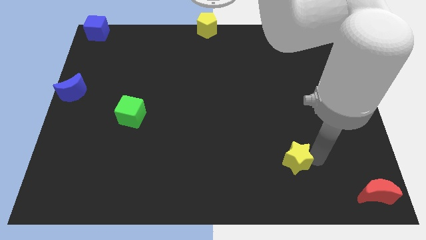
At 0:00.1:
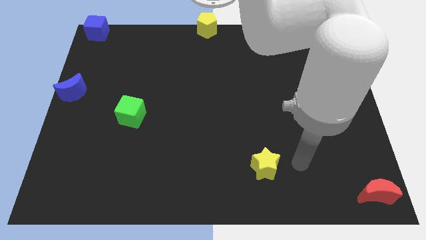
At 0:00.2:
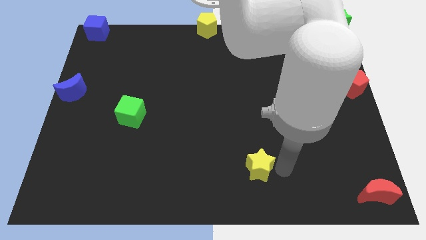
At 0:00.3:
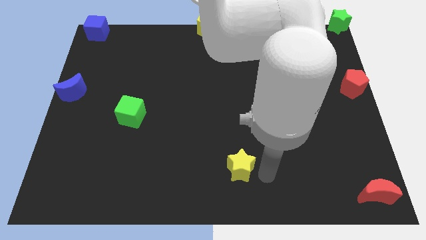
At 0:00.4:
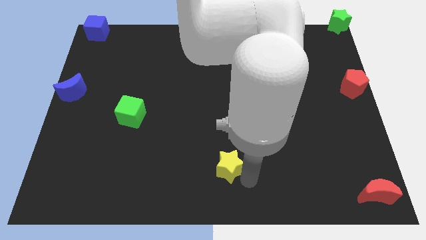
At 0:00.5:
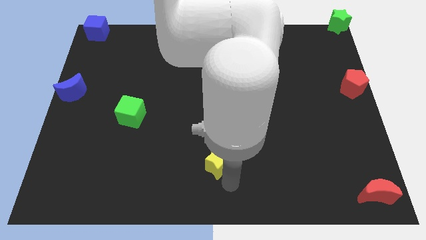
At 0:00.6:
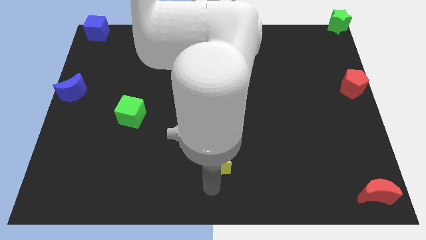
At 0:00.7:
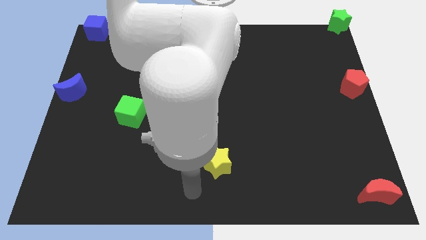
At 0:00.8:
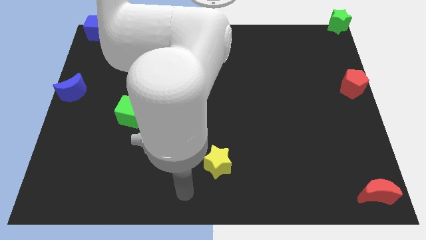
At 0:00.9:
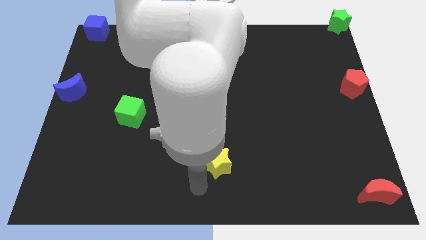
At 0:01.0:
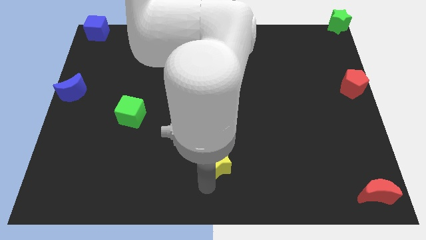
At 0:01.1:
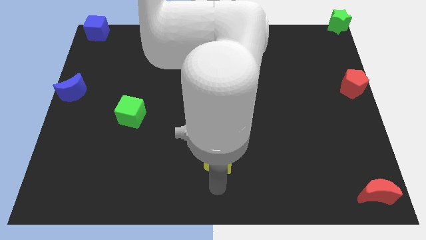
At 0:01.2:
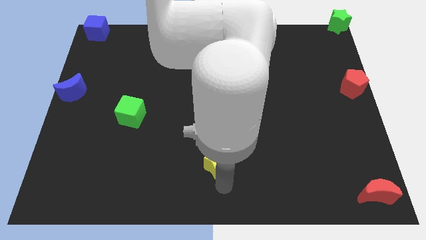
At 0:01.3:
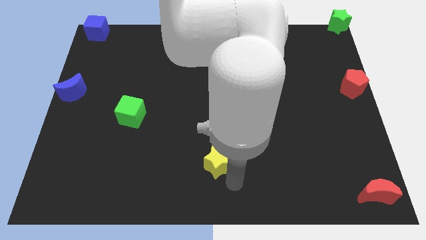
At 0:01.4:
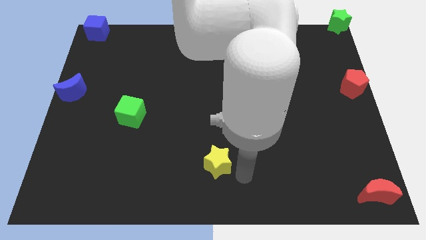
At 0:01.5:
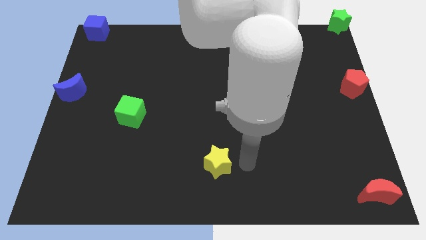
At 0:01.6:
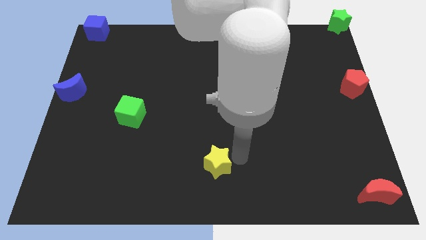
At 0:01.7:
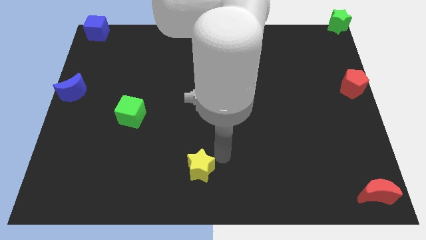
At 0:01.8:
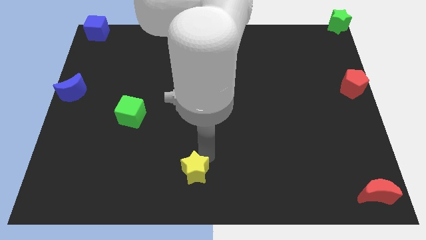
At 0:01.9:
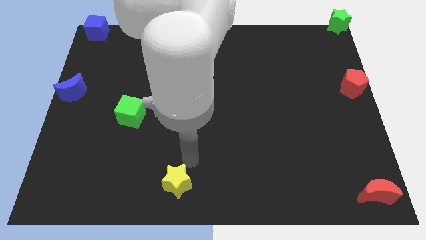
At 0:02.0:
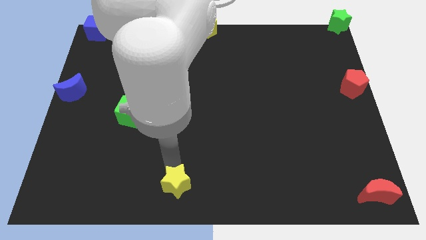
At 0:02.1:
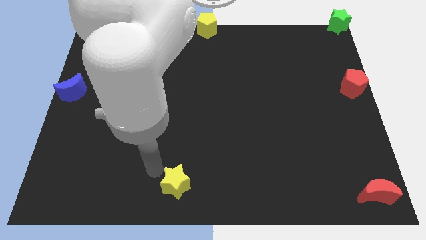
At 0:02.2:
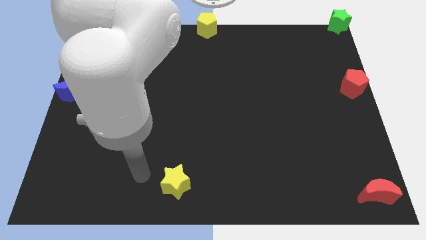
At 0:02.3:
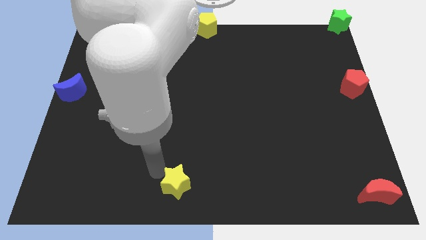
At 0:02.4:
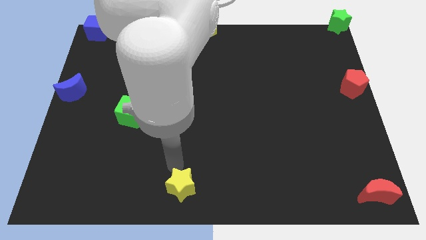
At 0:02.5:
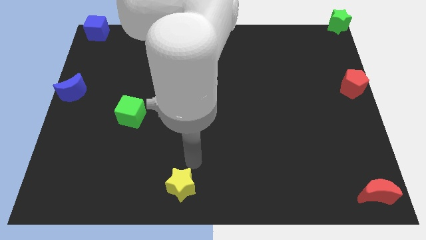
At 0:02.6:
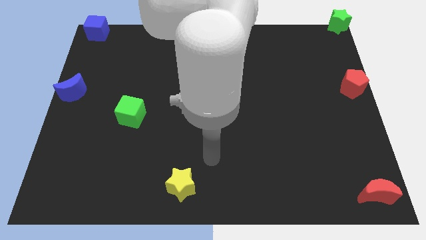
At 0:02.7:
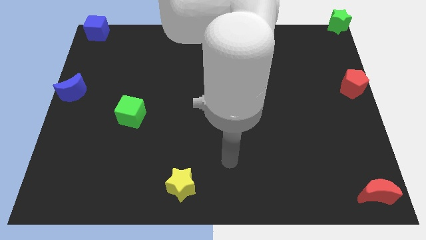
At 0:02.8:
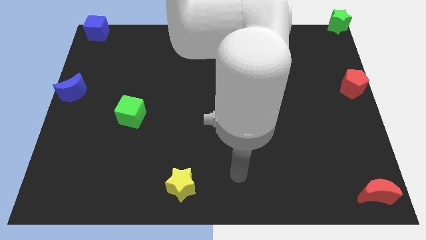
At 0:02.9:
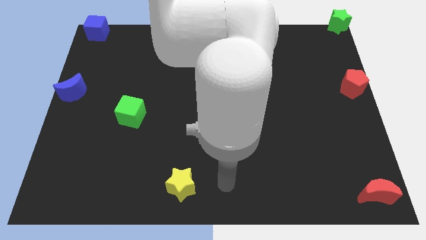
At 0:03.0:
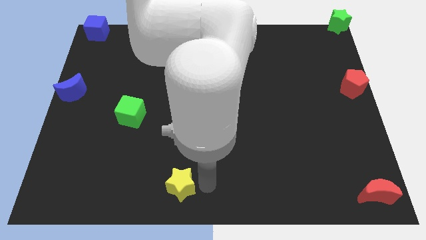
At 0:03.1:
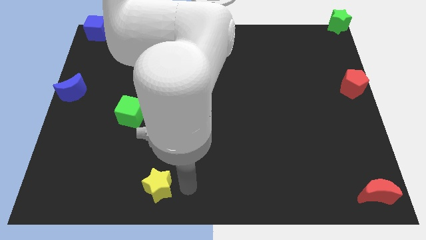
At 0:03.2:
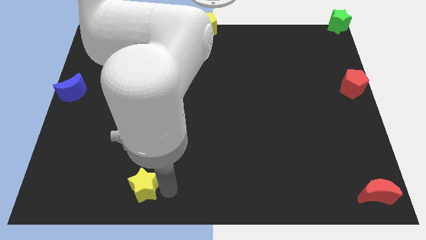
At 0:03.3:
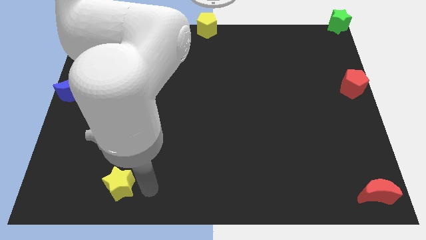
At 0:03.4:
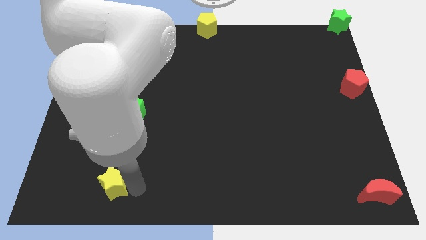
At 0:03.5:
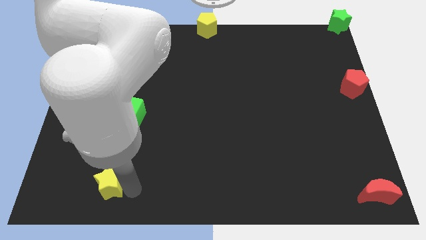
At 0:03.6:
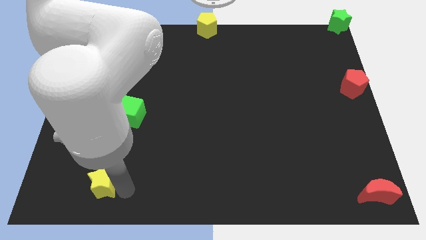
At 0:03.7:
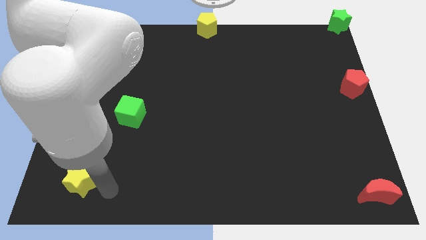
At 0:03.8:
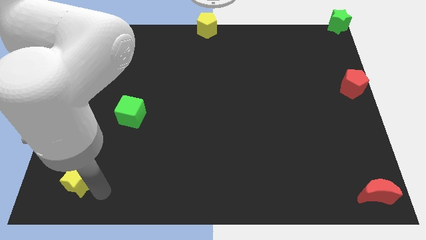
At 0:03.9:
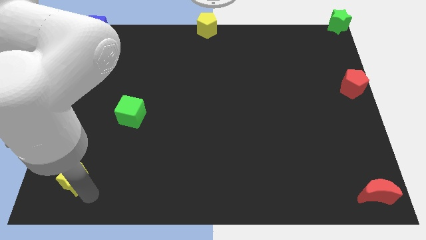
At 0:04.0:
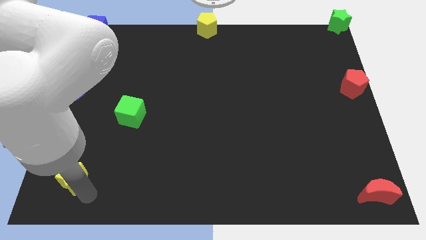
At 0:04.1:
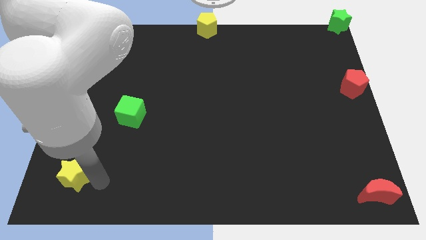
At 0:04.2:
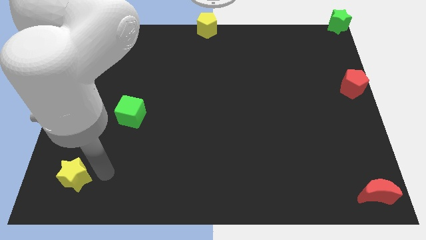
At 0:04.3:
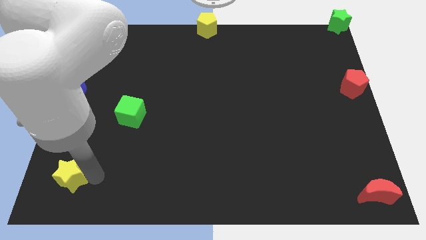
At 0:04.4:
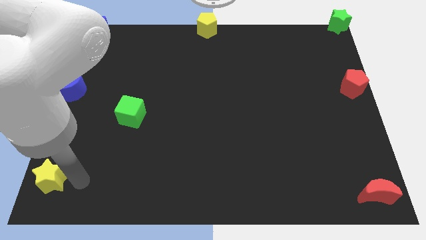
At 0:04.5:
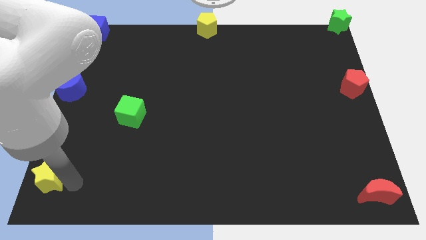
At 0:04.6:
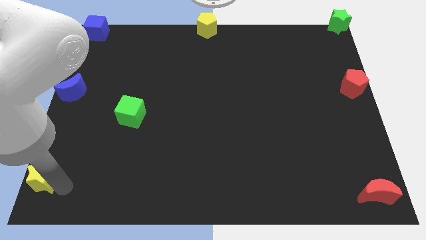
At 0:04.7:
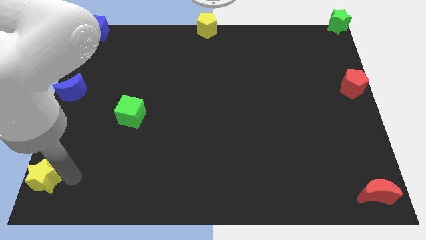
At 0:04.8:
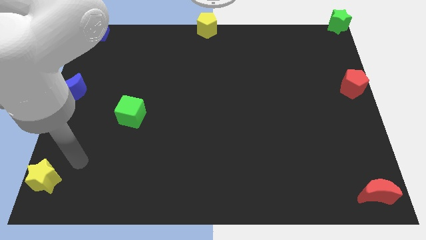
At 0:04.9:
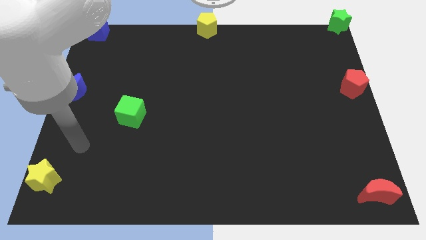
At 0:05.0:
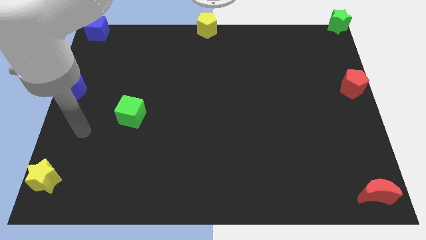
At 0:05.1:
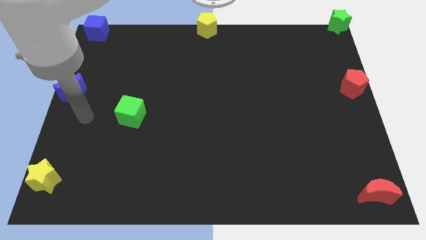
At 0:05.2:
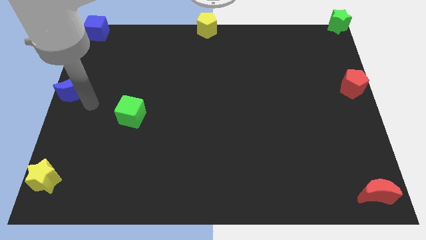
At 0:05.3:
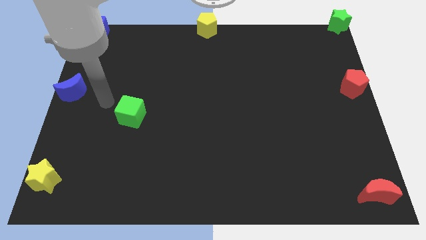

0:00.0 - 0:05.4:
place yellow star to the bottom left corner of the board

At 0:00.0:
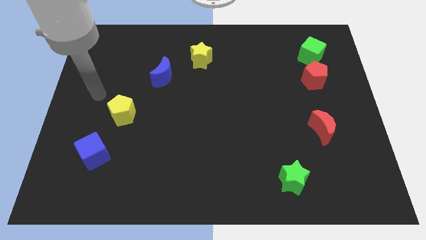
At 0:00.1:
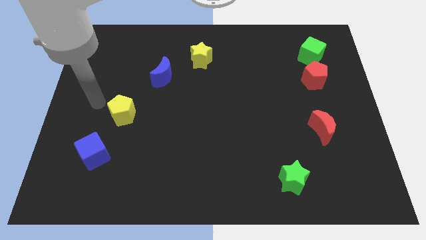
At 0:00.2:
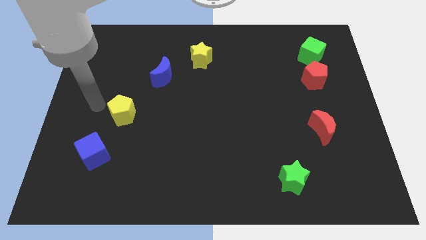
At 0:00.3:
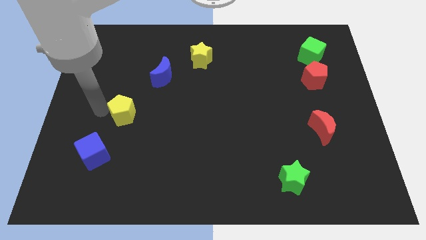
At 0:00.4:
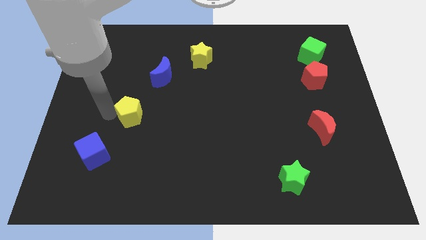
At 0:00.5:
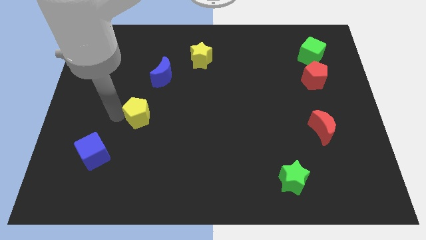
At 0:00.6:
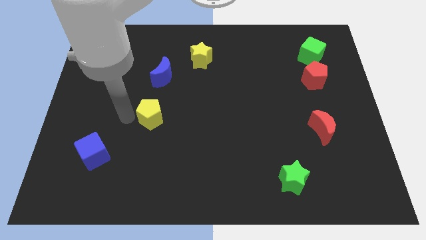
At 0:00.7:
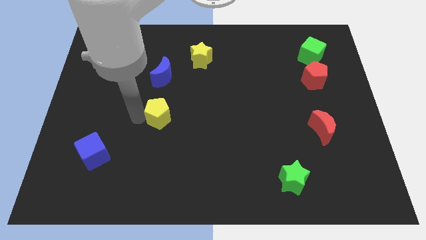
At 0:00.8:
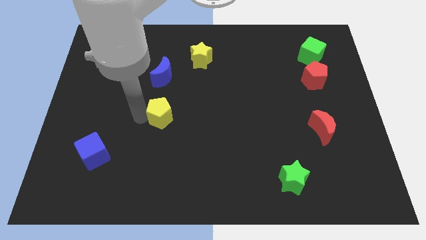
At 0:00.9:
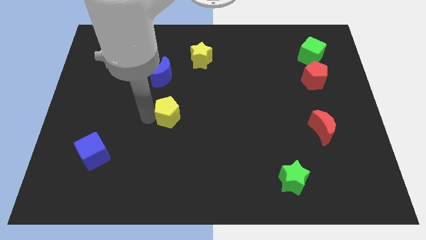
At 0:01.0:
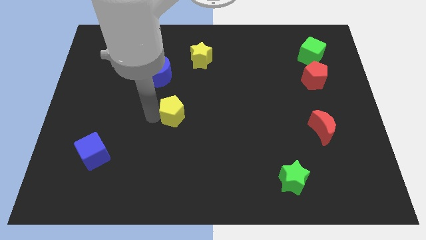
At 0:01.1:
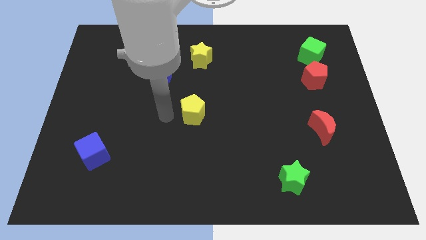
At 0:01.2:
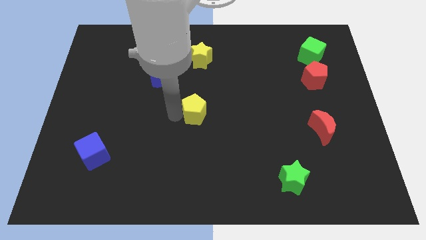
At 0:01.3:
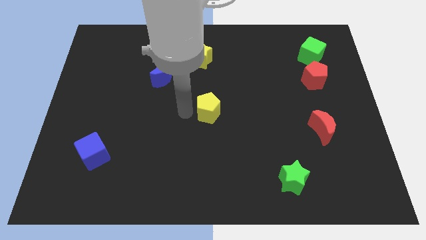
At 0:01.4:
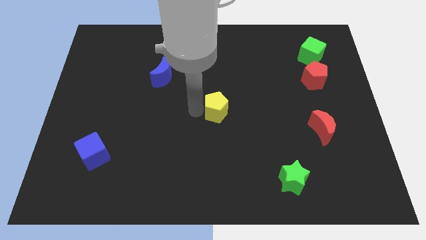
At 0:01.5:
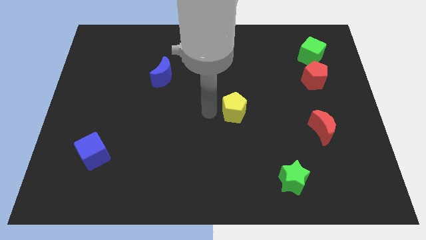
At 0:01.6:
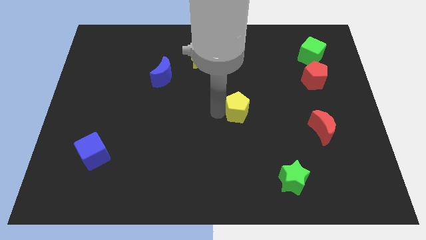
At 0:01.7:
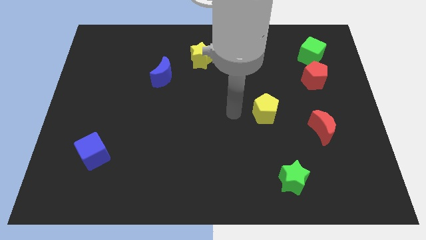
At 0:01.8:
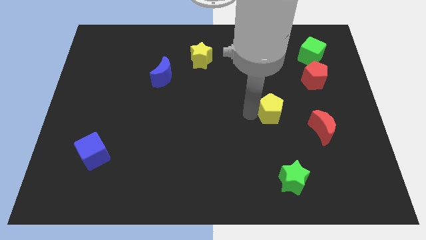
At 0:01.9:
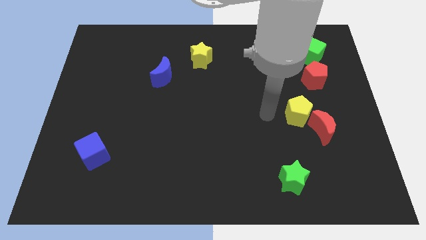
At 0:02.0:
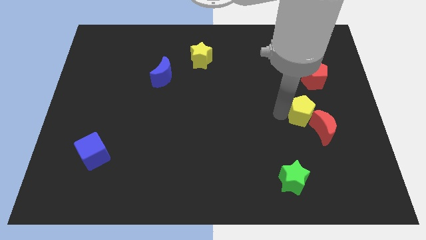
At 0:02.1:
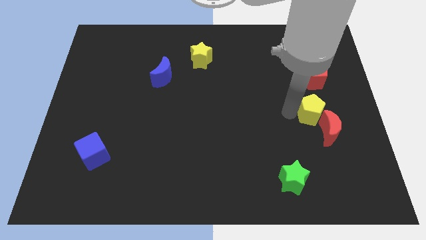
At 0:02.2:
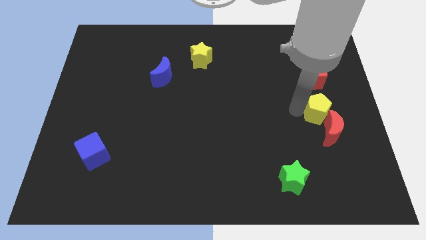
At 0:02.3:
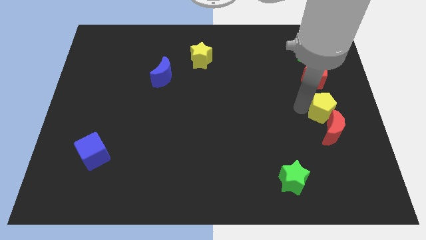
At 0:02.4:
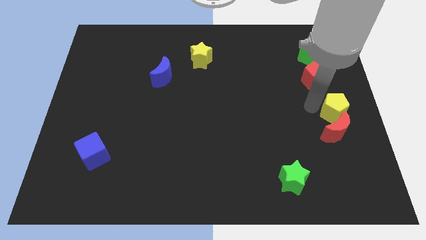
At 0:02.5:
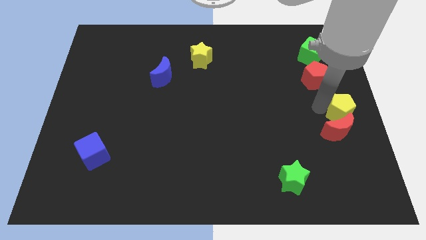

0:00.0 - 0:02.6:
move yellow pentagon right above the red moon

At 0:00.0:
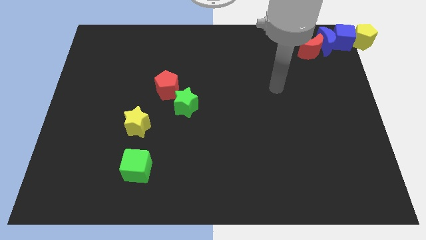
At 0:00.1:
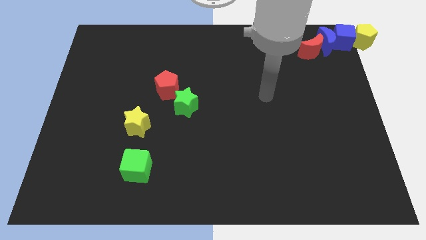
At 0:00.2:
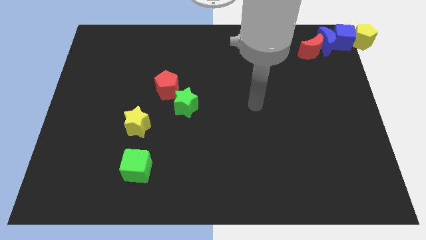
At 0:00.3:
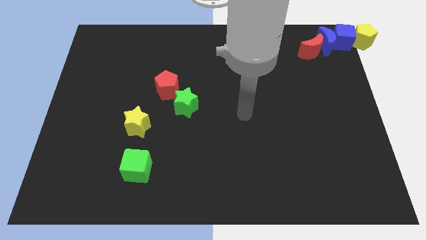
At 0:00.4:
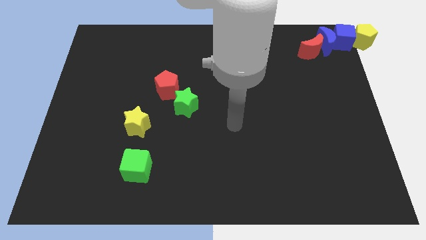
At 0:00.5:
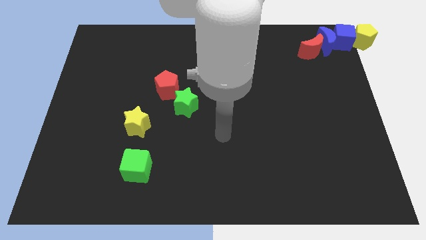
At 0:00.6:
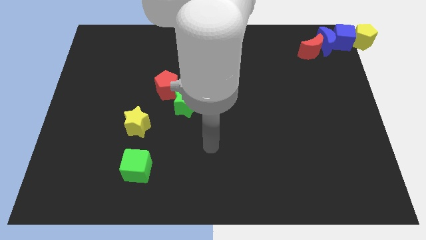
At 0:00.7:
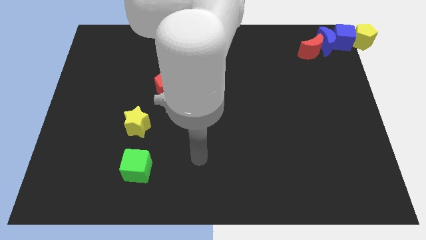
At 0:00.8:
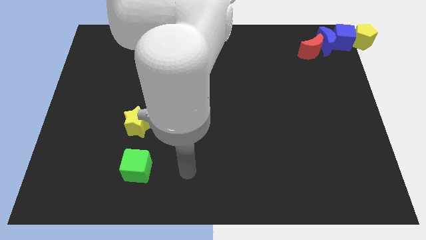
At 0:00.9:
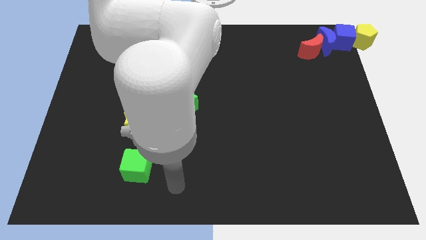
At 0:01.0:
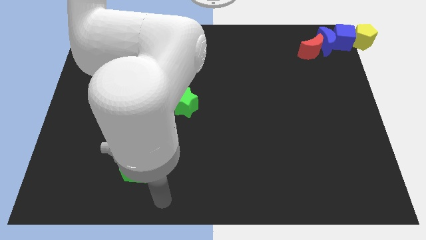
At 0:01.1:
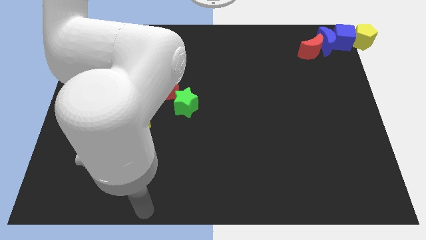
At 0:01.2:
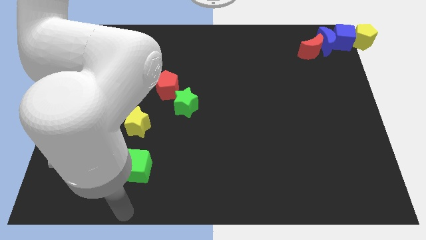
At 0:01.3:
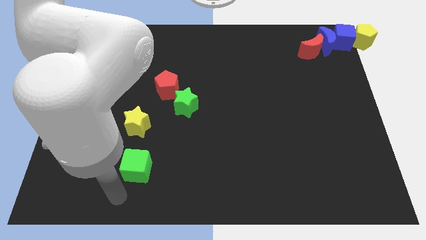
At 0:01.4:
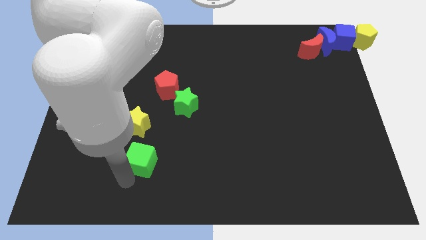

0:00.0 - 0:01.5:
move the arm to the bottom of the green cube
